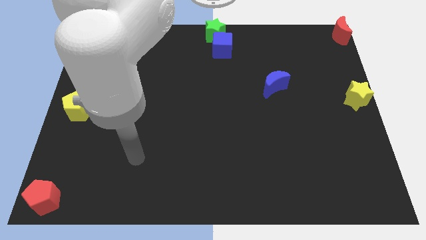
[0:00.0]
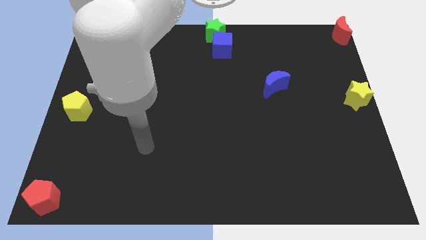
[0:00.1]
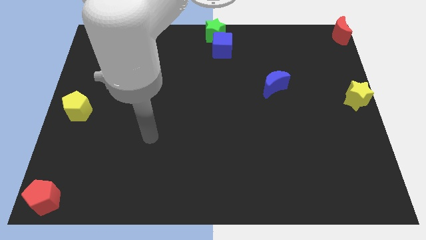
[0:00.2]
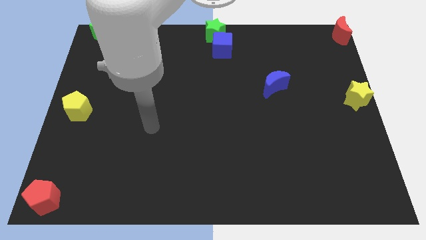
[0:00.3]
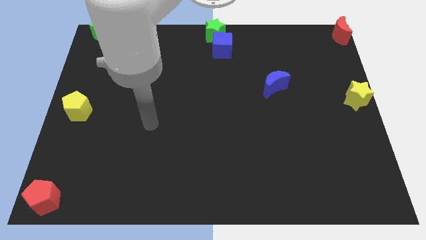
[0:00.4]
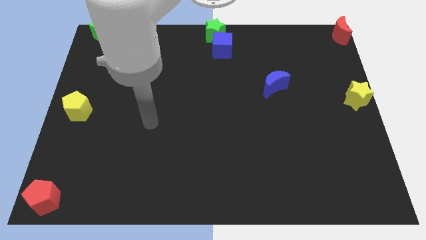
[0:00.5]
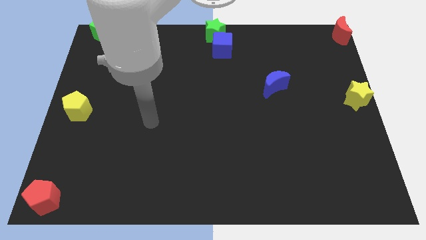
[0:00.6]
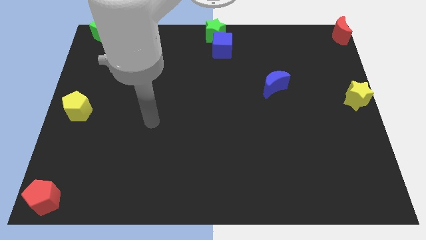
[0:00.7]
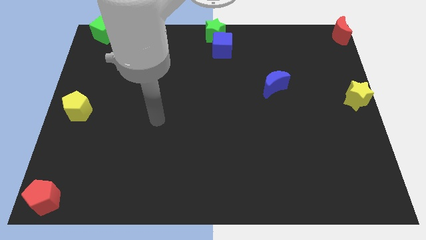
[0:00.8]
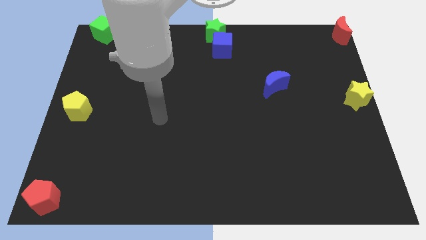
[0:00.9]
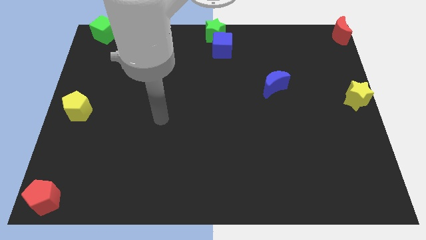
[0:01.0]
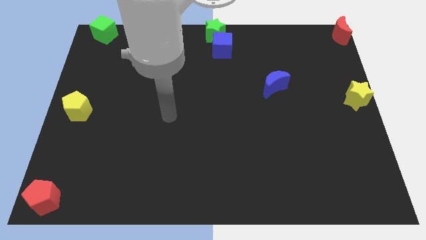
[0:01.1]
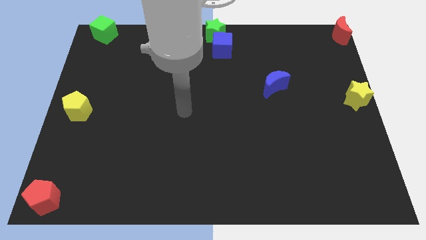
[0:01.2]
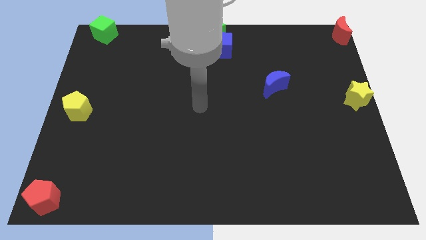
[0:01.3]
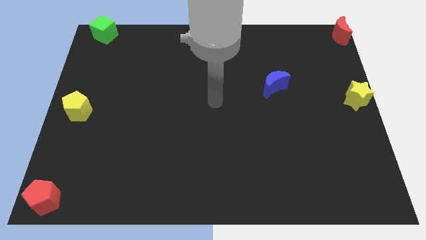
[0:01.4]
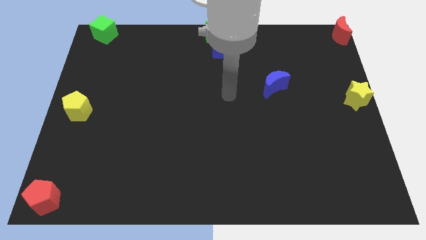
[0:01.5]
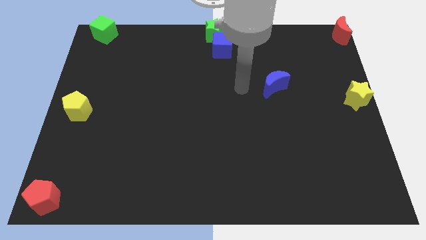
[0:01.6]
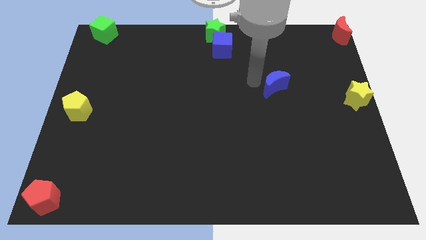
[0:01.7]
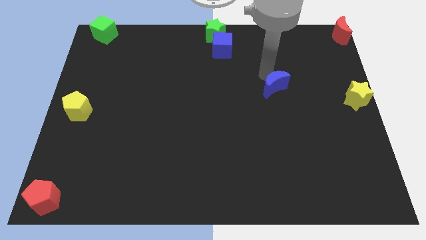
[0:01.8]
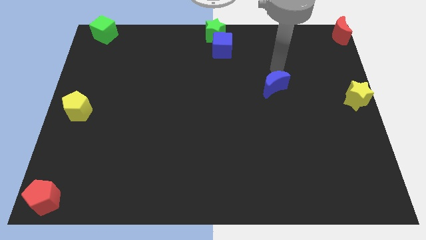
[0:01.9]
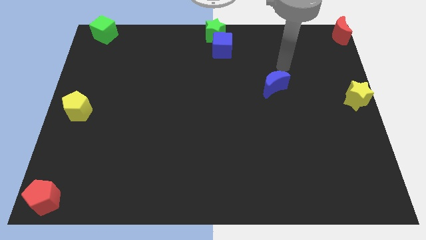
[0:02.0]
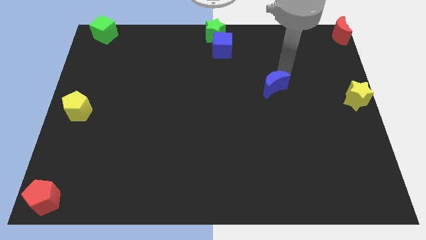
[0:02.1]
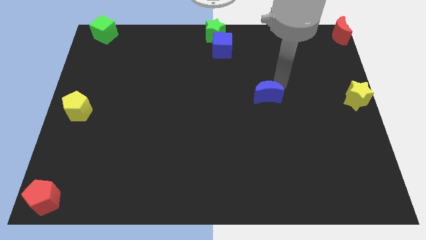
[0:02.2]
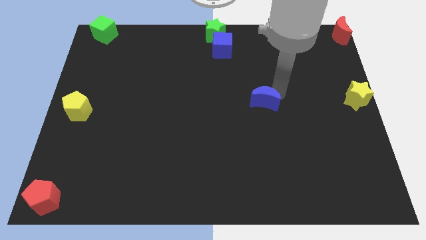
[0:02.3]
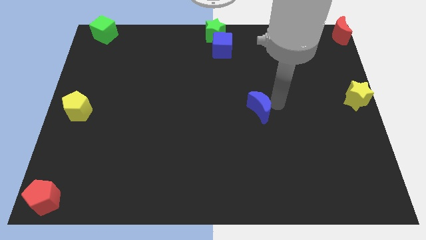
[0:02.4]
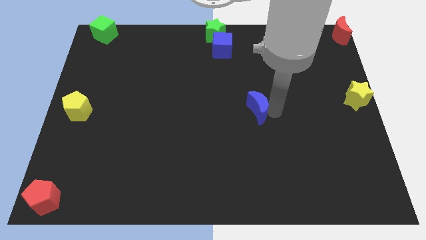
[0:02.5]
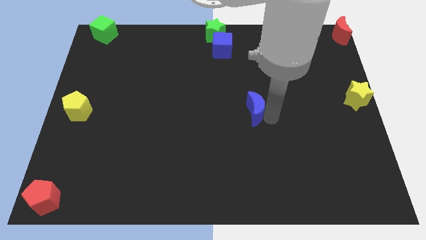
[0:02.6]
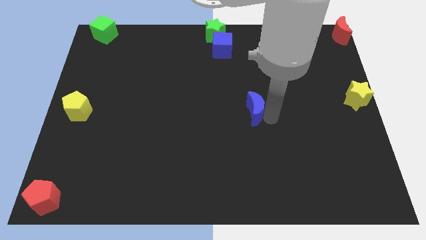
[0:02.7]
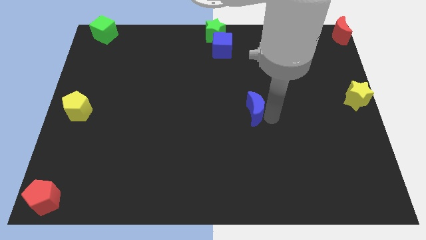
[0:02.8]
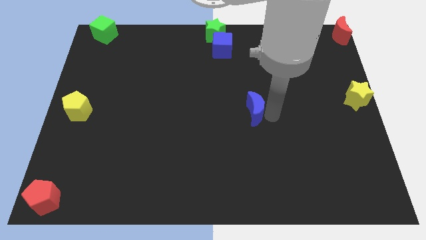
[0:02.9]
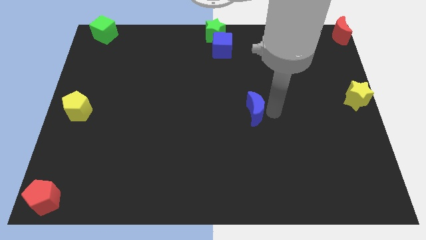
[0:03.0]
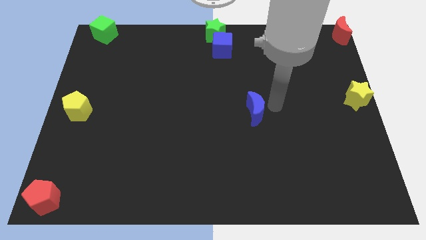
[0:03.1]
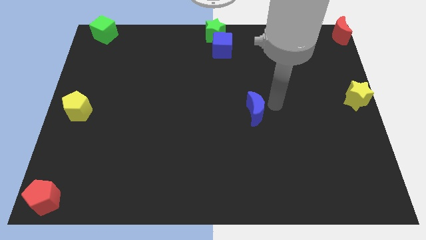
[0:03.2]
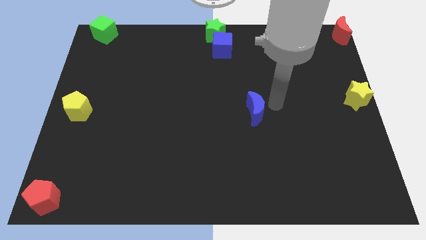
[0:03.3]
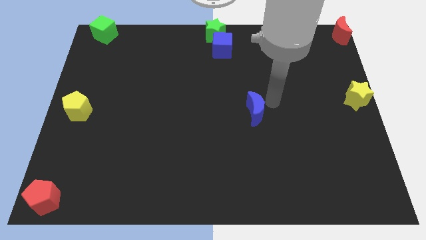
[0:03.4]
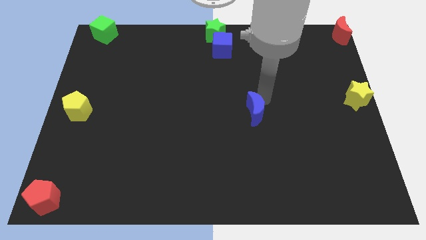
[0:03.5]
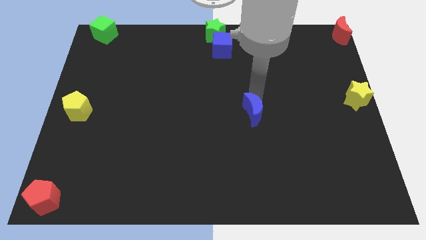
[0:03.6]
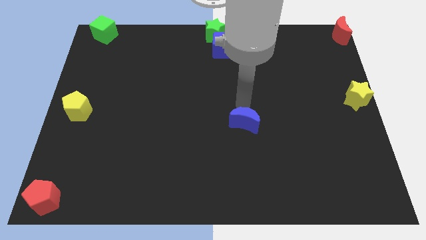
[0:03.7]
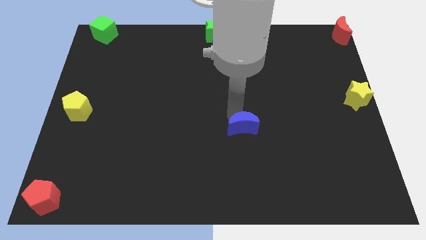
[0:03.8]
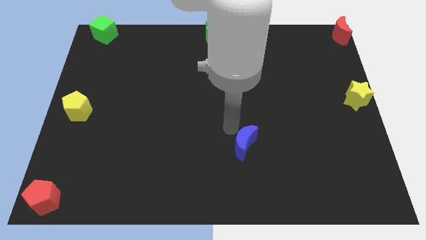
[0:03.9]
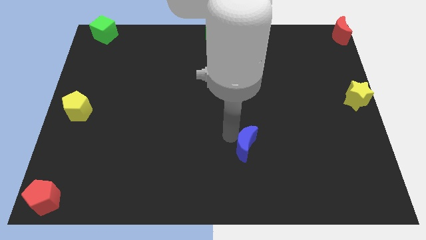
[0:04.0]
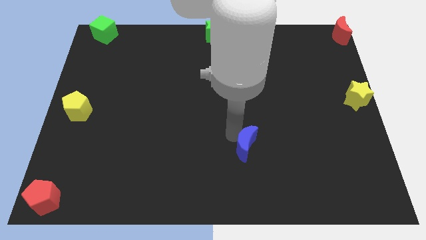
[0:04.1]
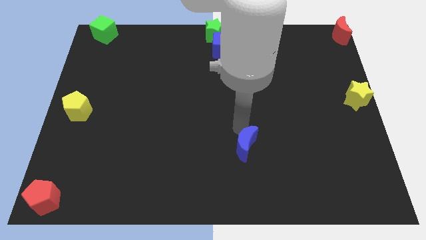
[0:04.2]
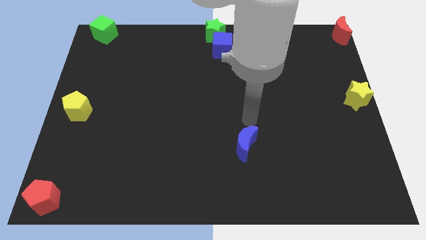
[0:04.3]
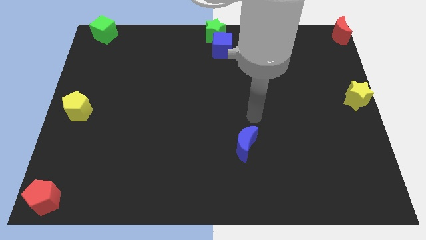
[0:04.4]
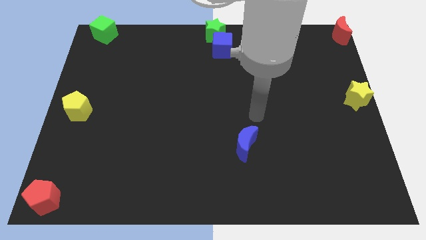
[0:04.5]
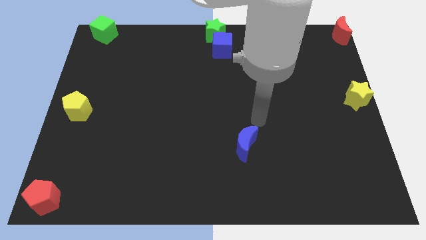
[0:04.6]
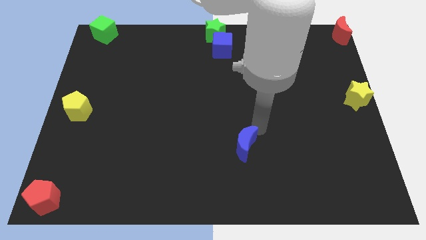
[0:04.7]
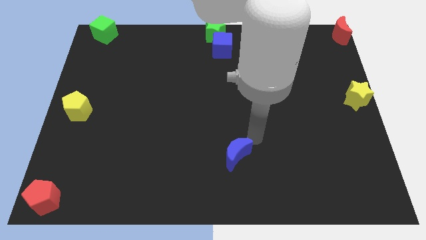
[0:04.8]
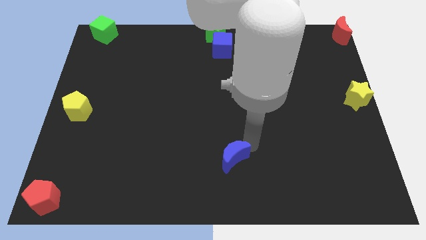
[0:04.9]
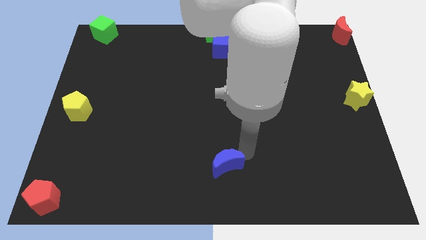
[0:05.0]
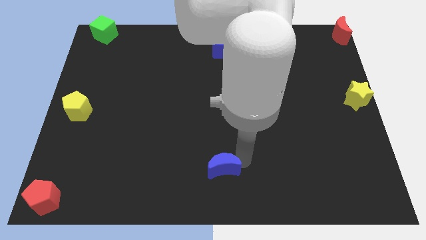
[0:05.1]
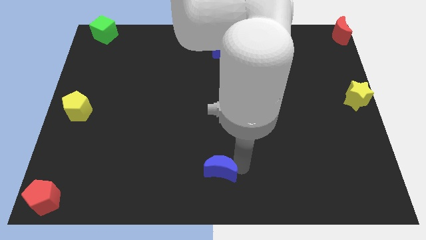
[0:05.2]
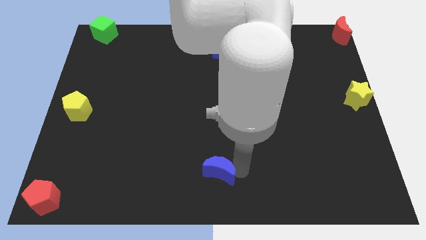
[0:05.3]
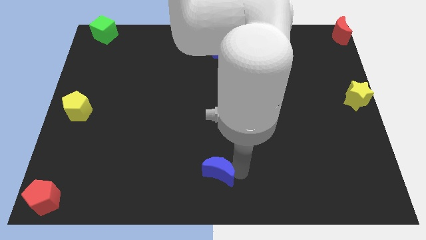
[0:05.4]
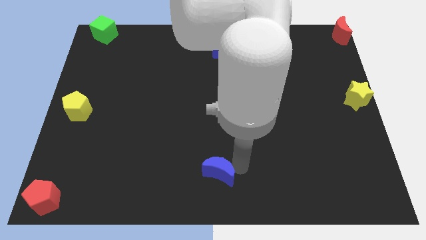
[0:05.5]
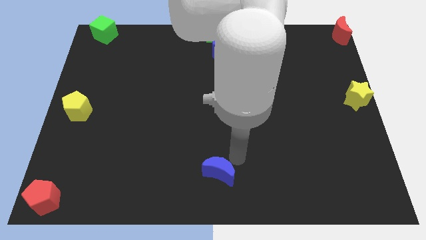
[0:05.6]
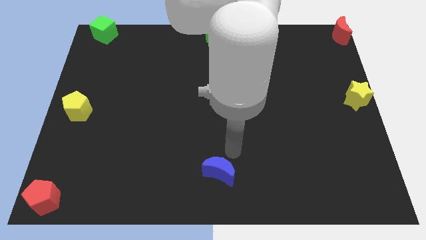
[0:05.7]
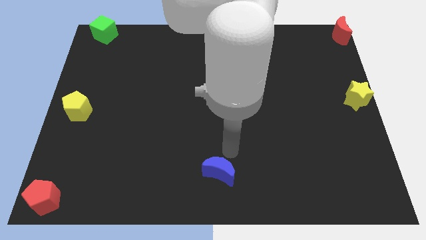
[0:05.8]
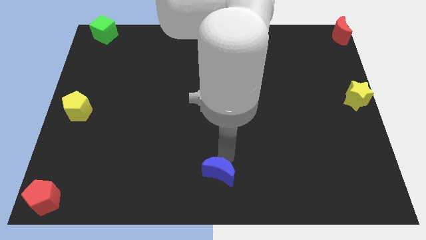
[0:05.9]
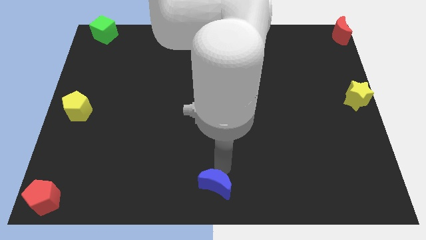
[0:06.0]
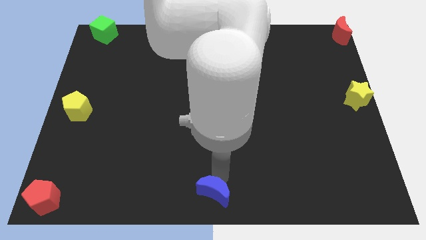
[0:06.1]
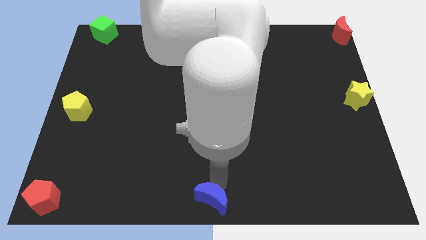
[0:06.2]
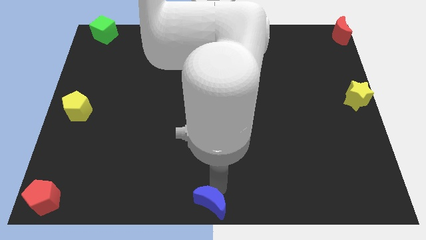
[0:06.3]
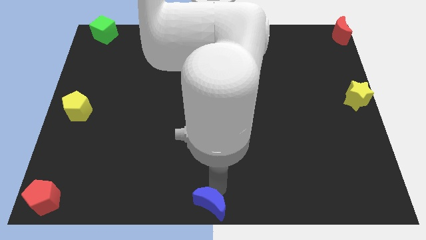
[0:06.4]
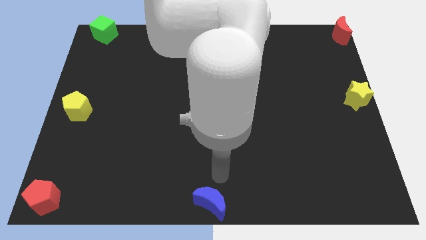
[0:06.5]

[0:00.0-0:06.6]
push the blue moon to the bottom center

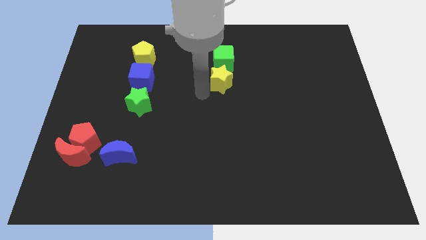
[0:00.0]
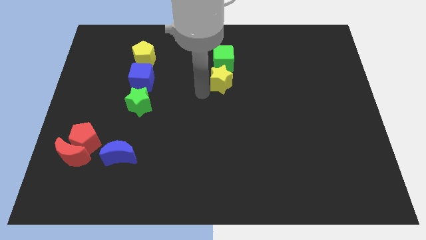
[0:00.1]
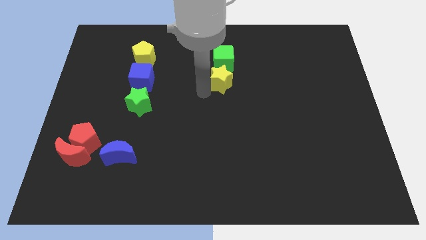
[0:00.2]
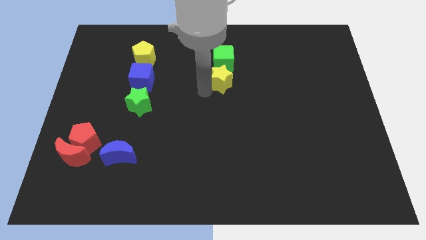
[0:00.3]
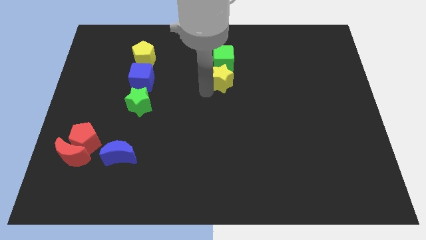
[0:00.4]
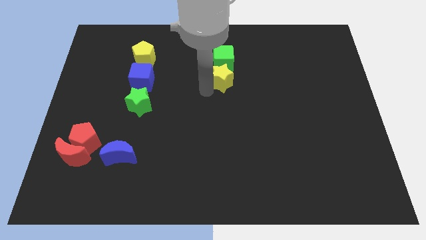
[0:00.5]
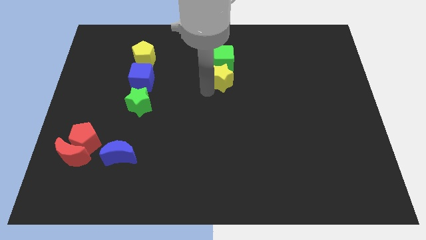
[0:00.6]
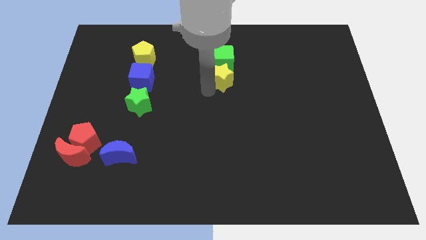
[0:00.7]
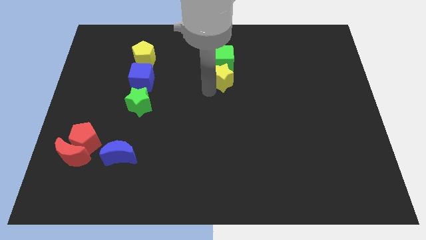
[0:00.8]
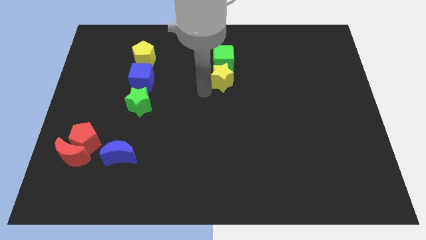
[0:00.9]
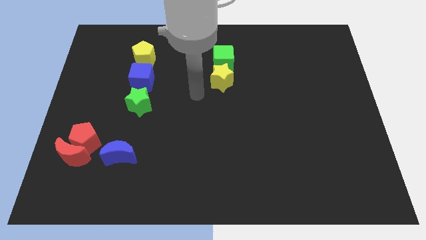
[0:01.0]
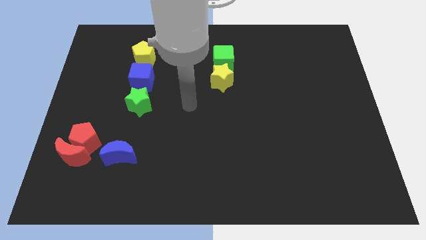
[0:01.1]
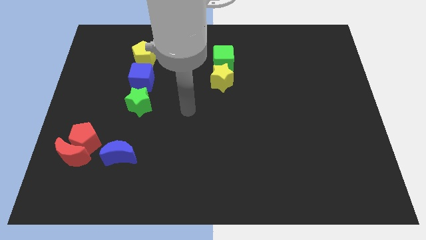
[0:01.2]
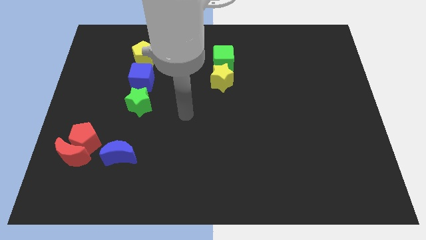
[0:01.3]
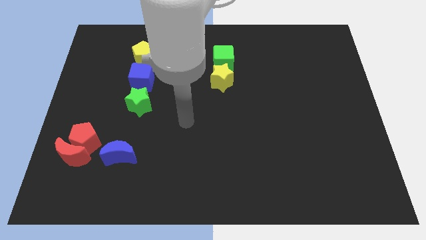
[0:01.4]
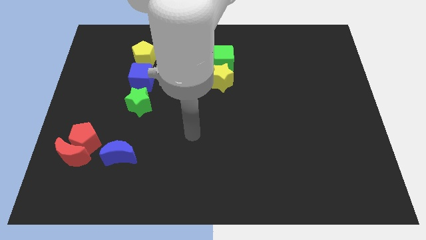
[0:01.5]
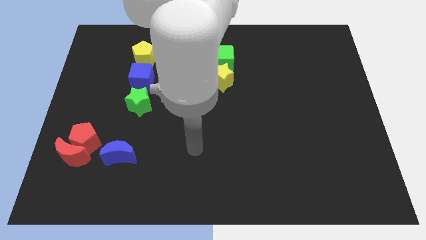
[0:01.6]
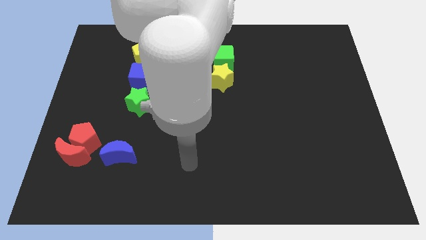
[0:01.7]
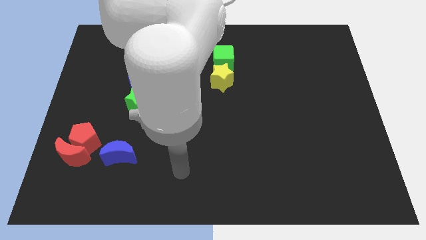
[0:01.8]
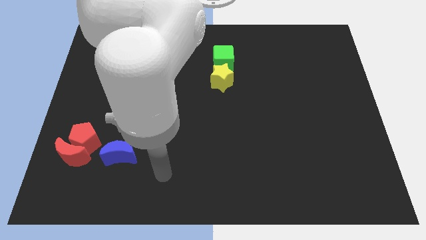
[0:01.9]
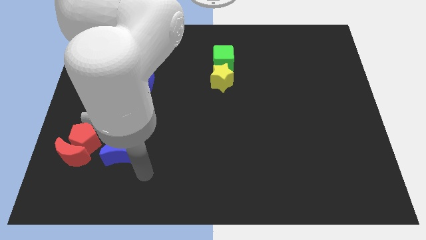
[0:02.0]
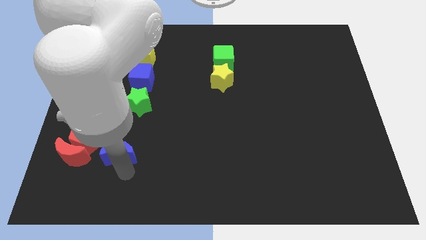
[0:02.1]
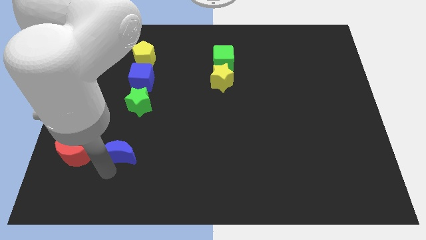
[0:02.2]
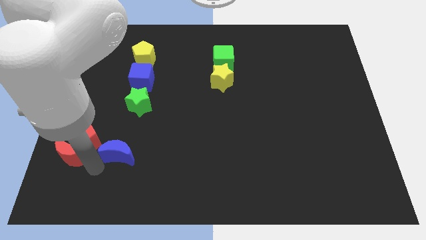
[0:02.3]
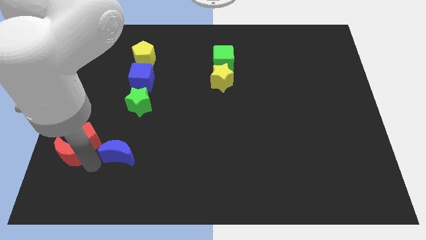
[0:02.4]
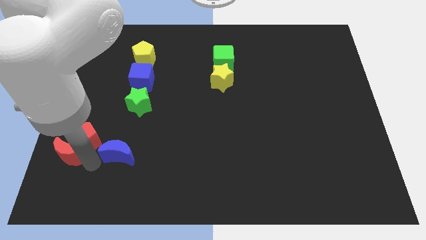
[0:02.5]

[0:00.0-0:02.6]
push the yellow star near green cube
